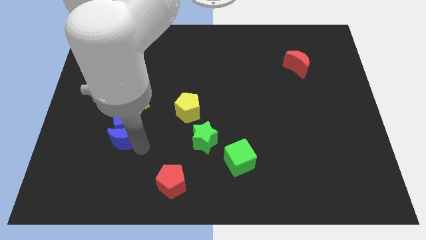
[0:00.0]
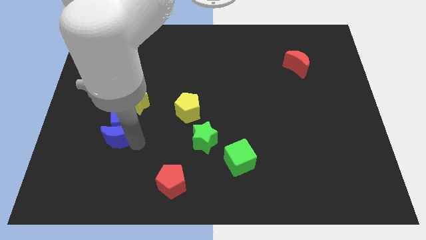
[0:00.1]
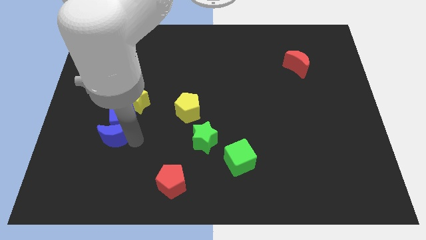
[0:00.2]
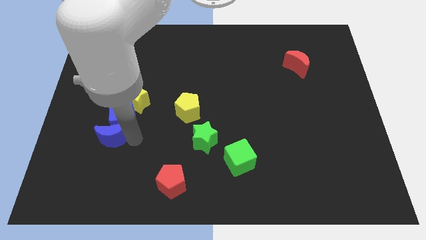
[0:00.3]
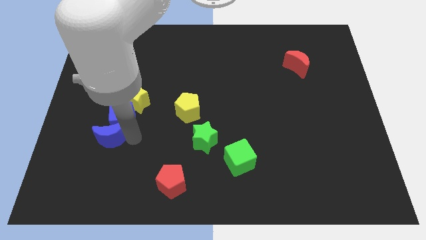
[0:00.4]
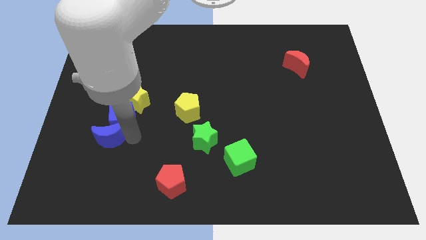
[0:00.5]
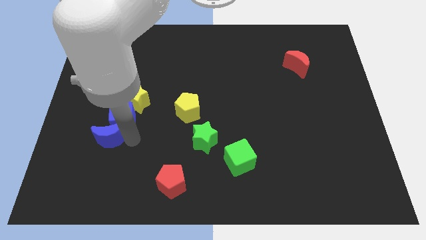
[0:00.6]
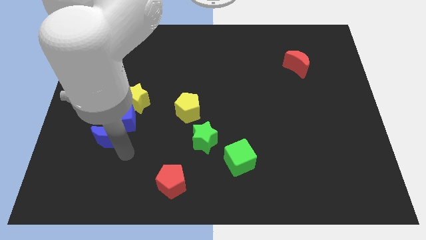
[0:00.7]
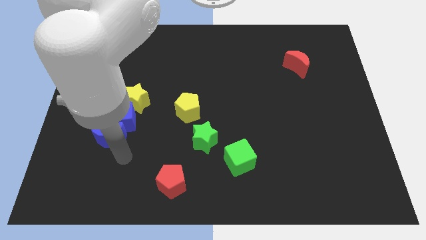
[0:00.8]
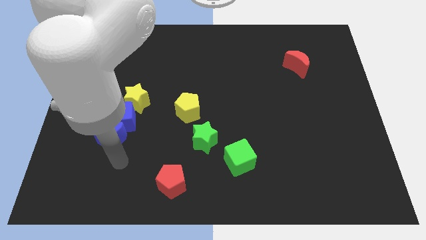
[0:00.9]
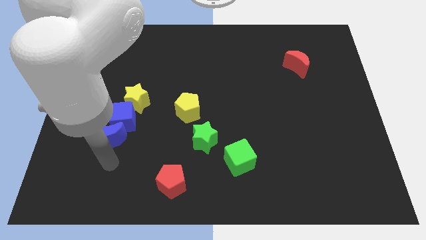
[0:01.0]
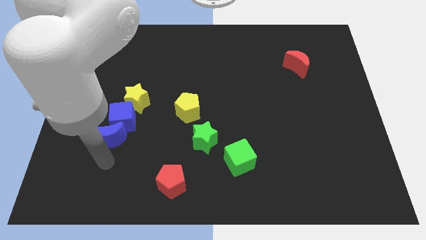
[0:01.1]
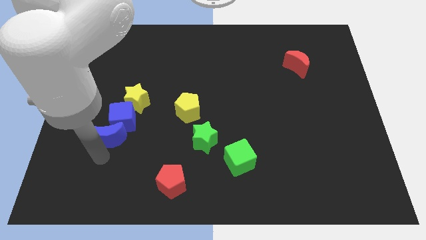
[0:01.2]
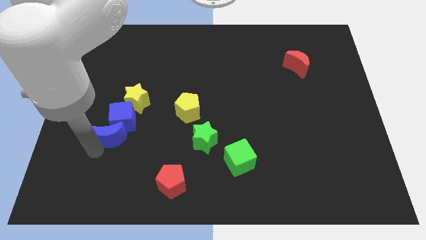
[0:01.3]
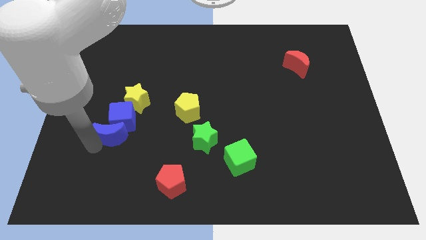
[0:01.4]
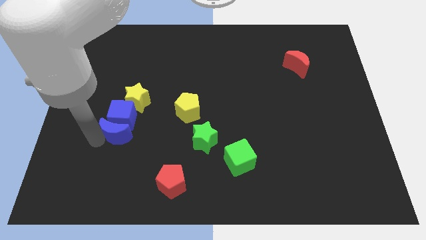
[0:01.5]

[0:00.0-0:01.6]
move the group of blue blocks into the yellow star

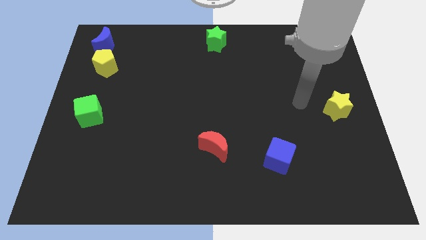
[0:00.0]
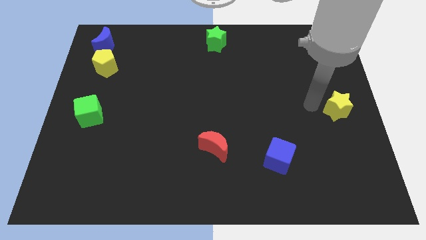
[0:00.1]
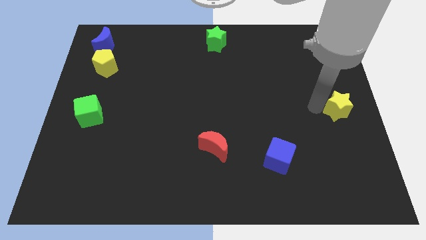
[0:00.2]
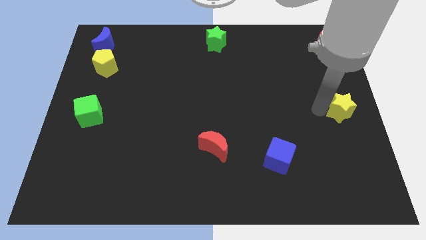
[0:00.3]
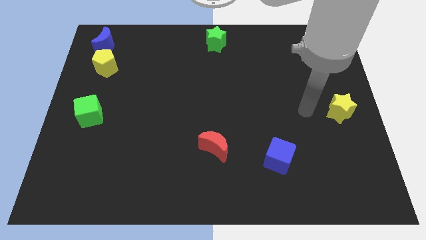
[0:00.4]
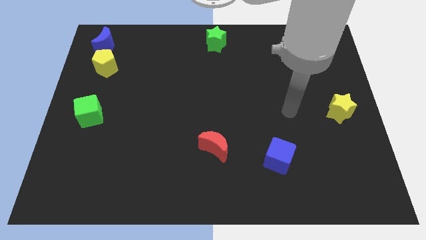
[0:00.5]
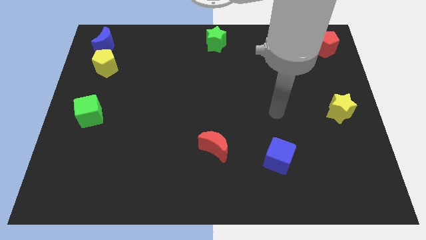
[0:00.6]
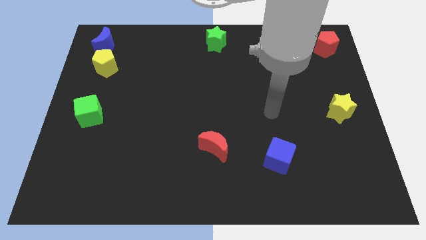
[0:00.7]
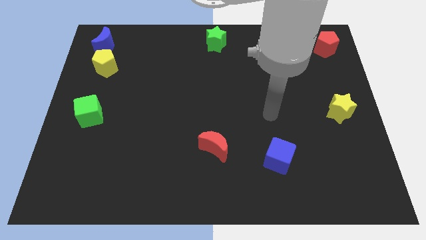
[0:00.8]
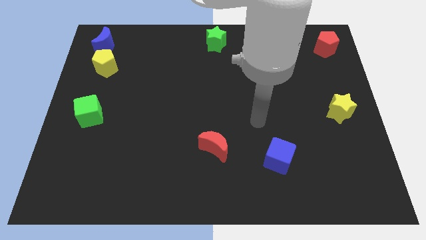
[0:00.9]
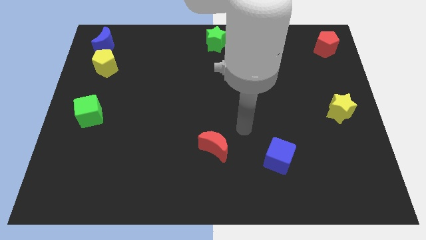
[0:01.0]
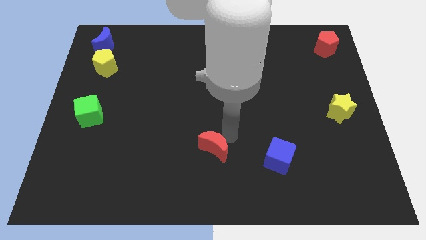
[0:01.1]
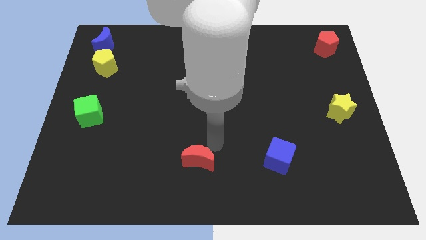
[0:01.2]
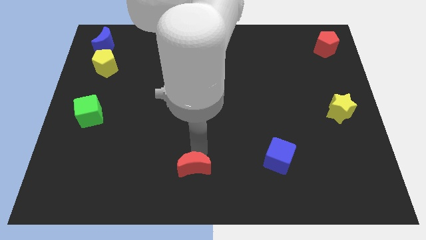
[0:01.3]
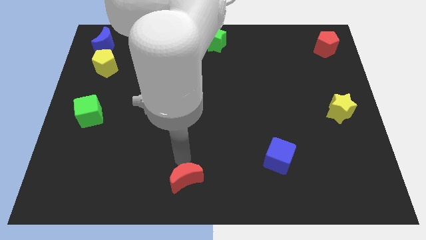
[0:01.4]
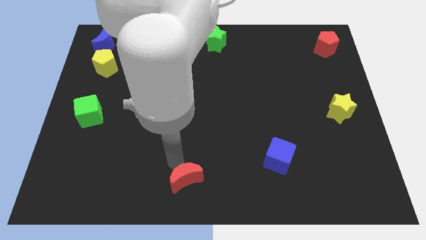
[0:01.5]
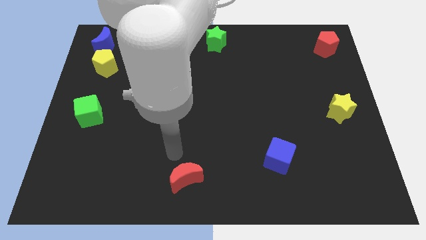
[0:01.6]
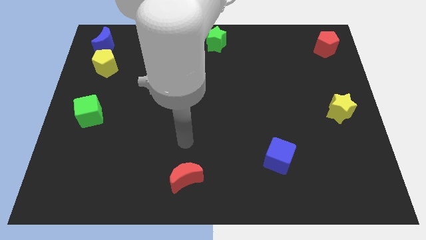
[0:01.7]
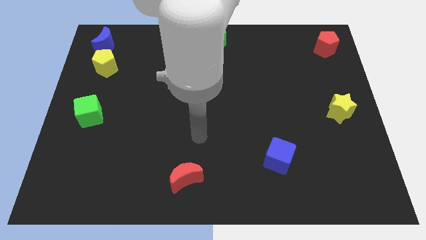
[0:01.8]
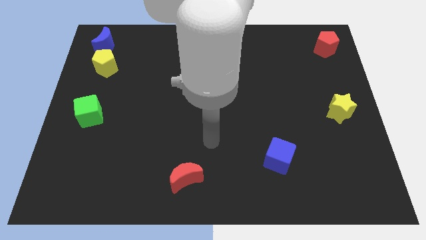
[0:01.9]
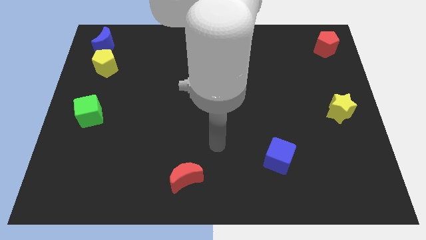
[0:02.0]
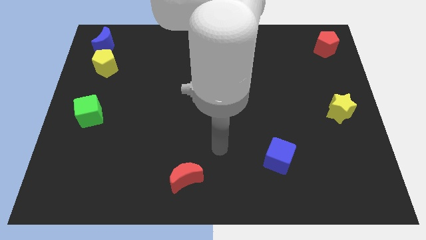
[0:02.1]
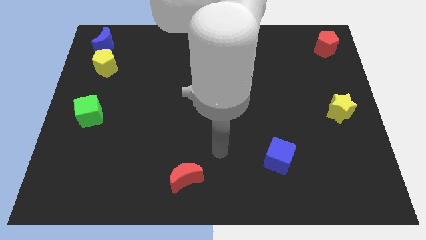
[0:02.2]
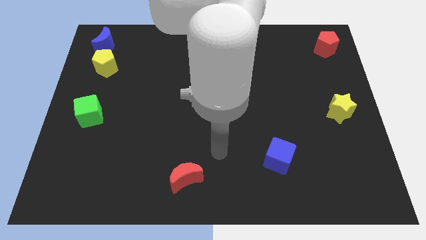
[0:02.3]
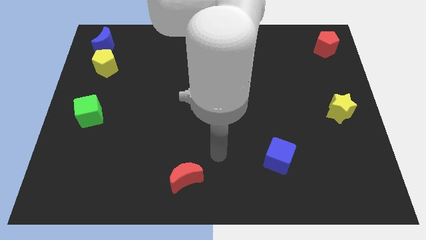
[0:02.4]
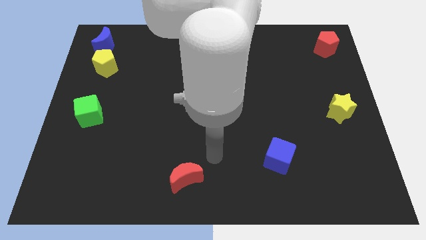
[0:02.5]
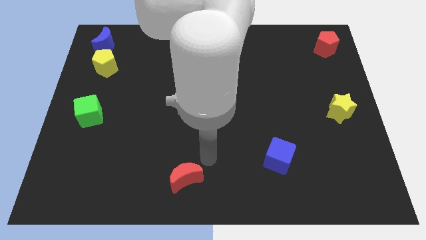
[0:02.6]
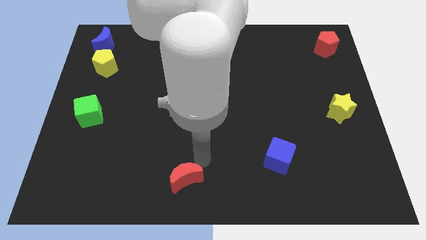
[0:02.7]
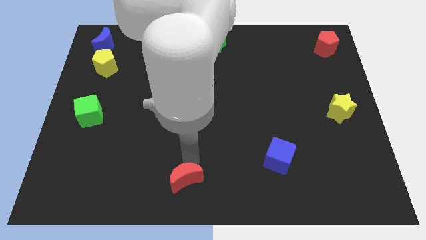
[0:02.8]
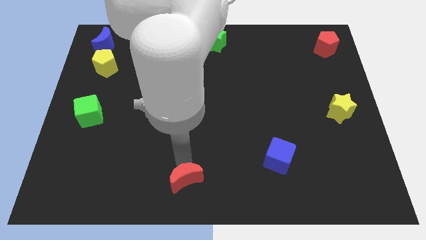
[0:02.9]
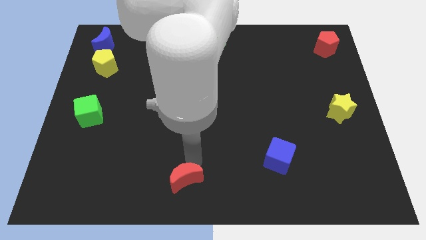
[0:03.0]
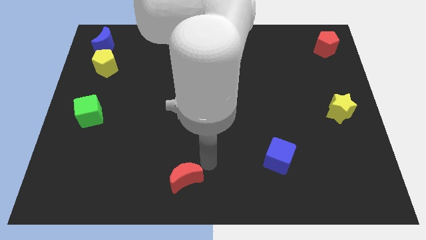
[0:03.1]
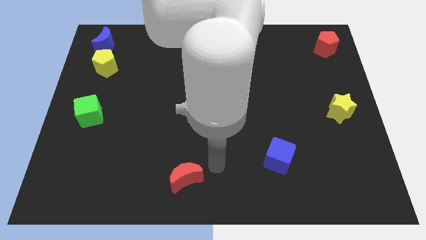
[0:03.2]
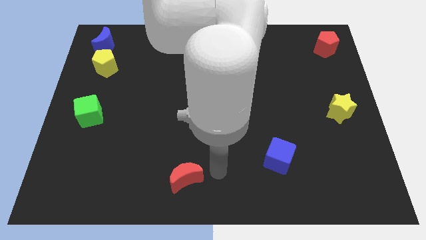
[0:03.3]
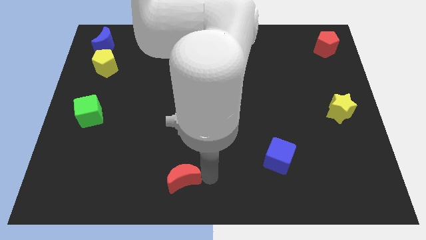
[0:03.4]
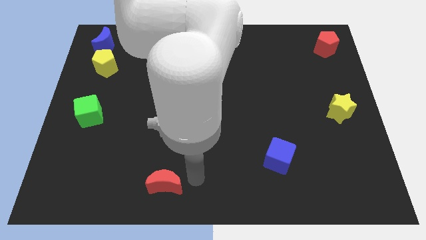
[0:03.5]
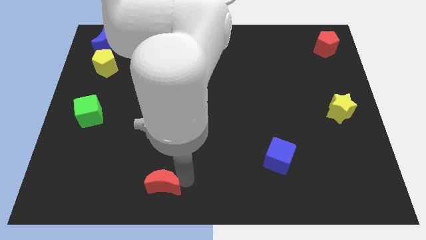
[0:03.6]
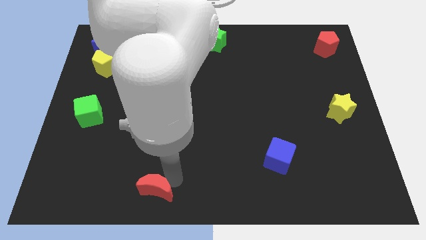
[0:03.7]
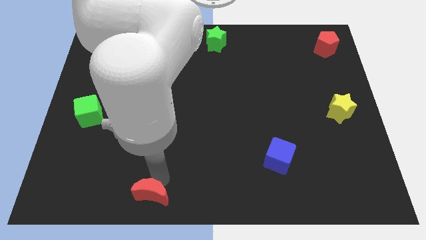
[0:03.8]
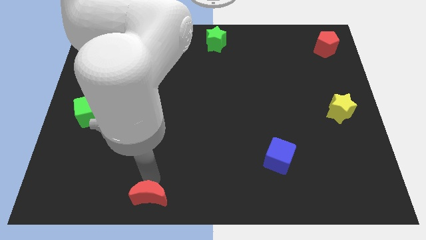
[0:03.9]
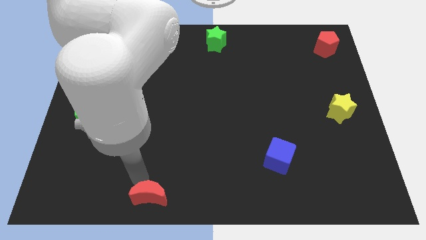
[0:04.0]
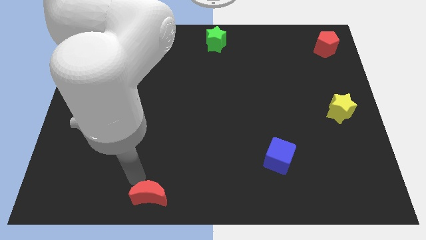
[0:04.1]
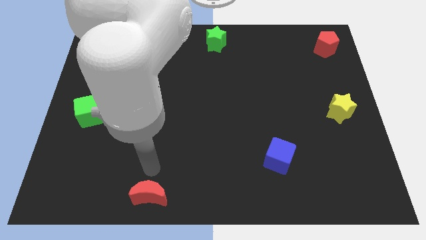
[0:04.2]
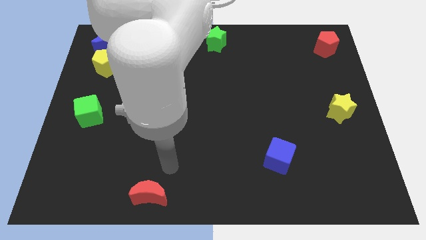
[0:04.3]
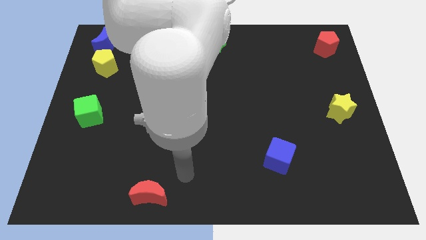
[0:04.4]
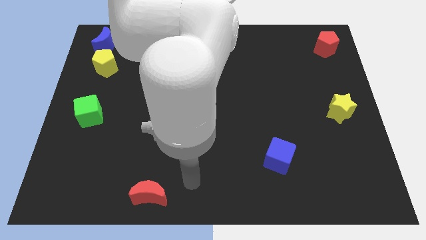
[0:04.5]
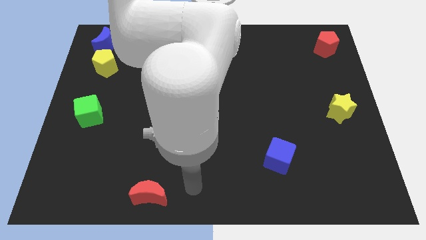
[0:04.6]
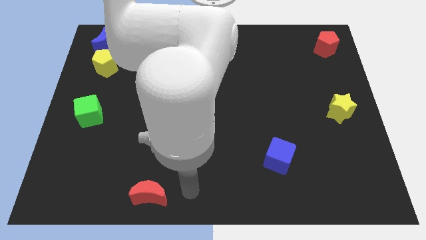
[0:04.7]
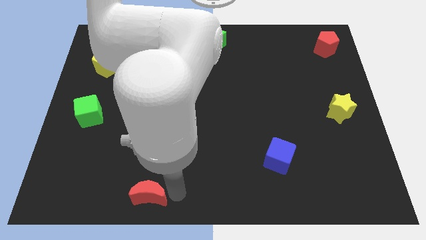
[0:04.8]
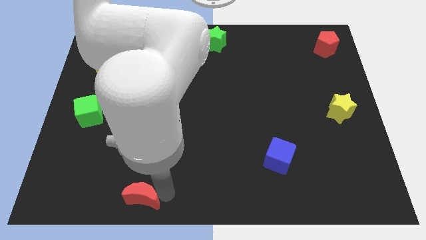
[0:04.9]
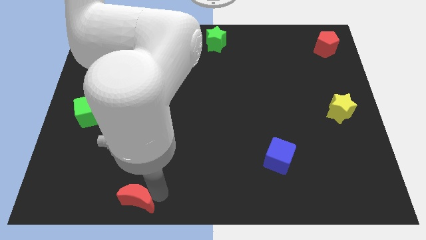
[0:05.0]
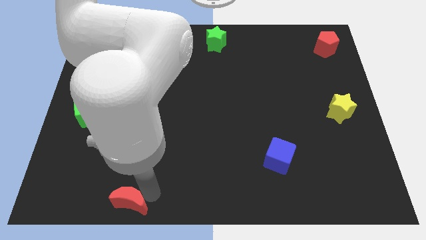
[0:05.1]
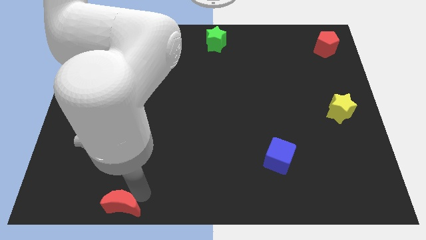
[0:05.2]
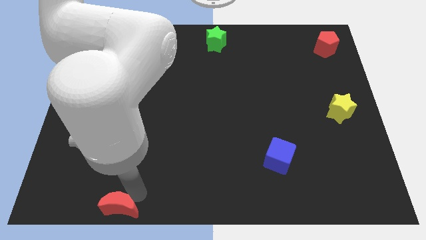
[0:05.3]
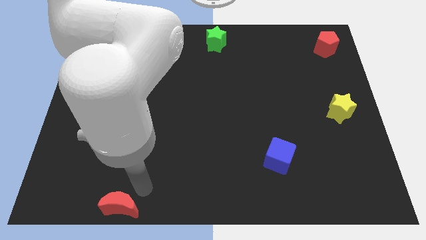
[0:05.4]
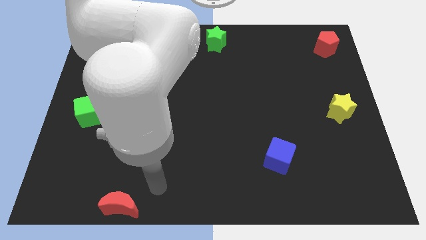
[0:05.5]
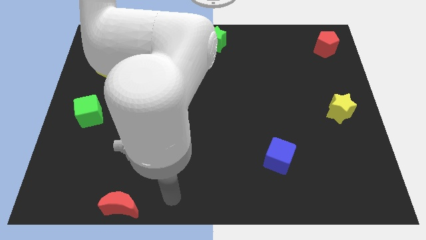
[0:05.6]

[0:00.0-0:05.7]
move red moon to the bottom

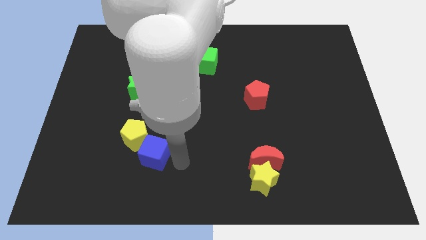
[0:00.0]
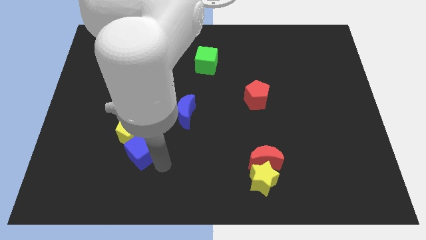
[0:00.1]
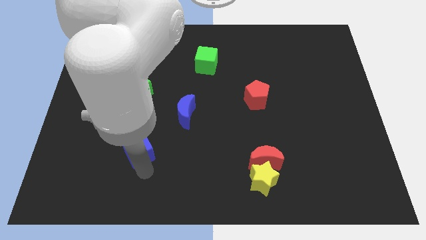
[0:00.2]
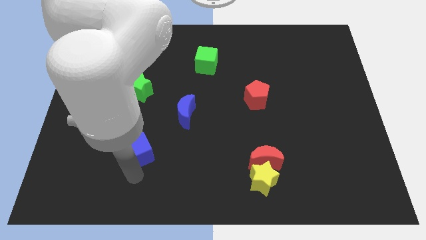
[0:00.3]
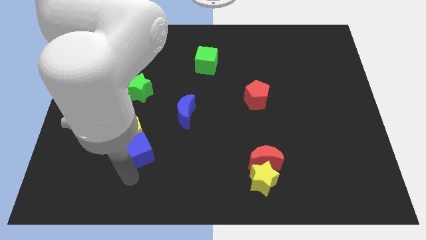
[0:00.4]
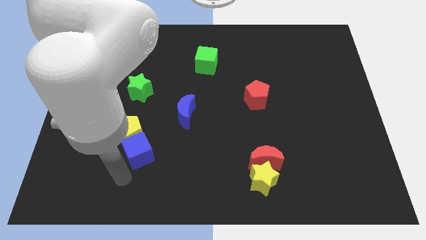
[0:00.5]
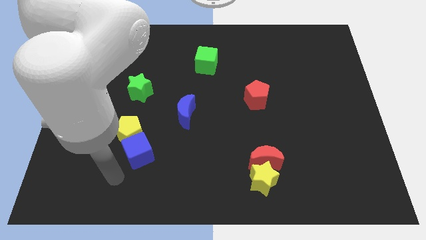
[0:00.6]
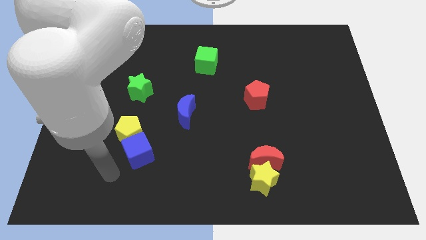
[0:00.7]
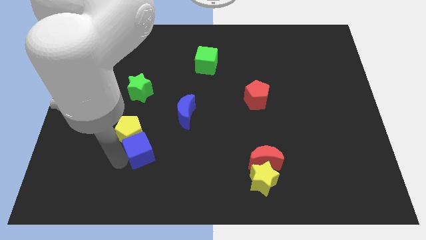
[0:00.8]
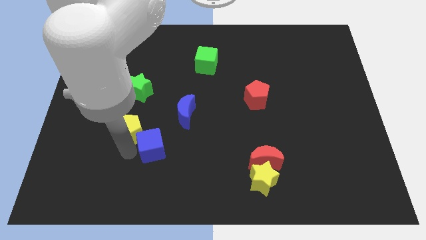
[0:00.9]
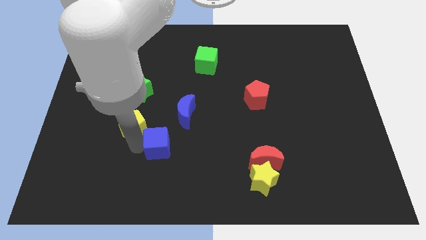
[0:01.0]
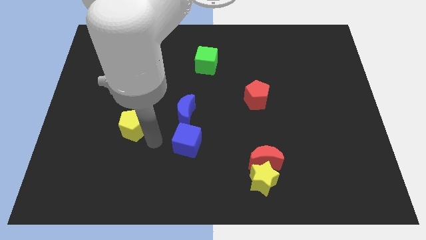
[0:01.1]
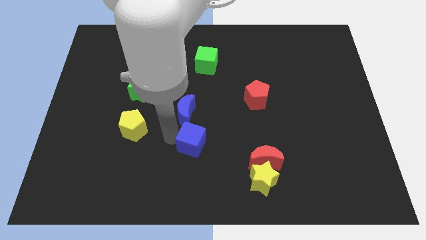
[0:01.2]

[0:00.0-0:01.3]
separate the blue cube and the yellow pentagon

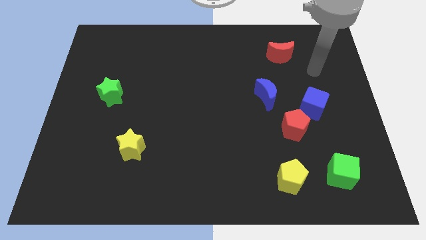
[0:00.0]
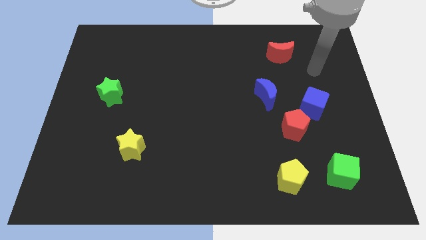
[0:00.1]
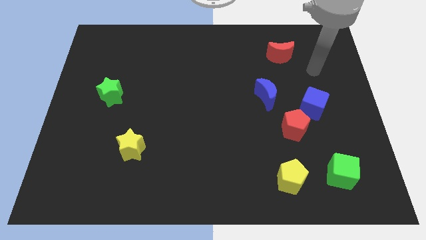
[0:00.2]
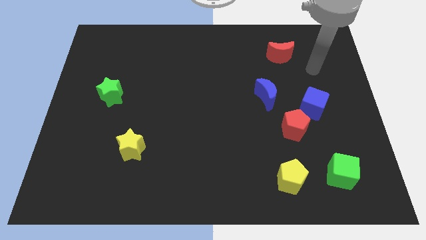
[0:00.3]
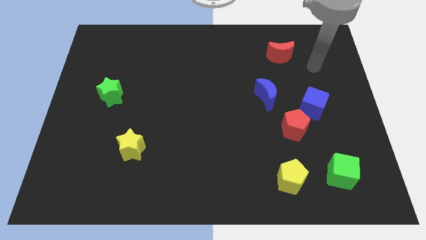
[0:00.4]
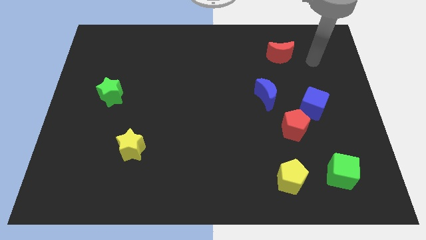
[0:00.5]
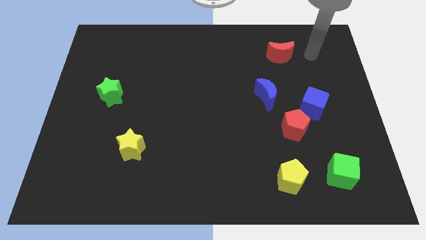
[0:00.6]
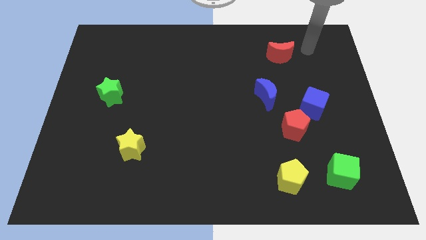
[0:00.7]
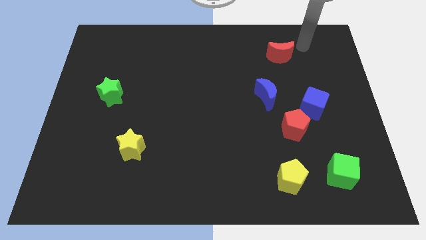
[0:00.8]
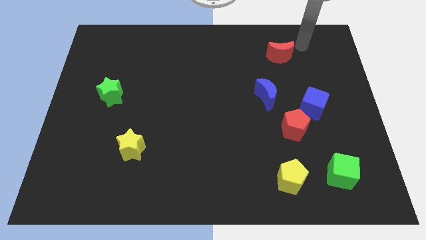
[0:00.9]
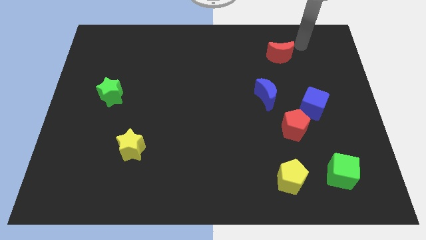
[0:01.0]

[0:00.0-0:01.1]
point at the right side of the red moon
